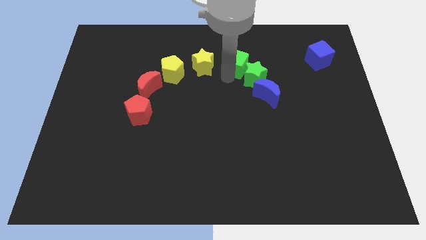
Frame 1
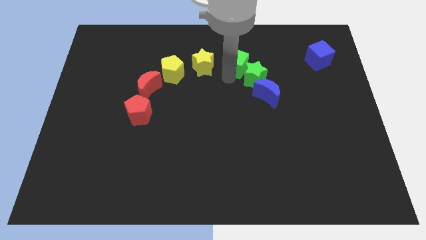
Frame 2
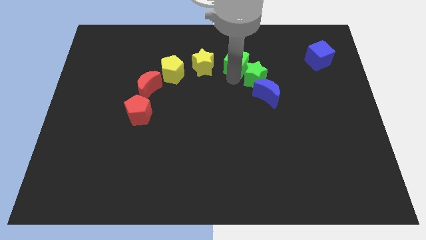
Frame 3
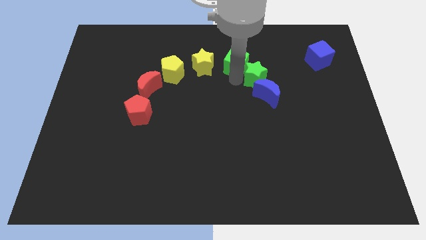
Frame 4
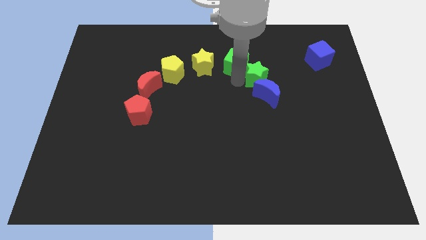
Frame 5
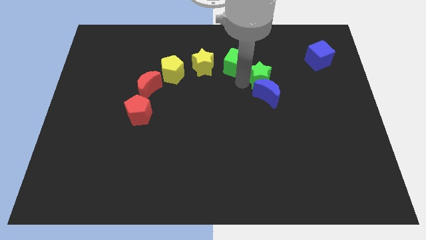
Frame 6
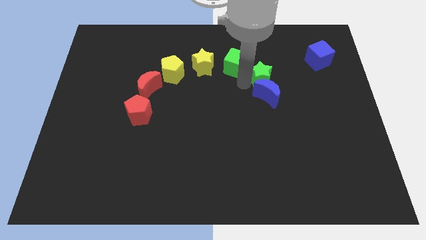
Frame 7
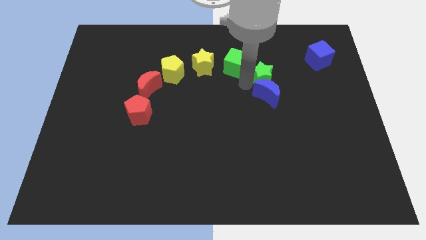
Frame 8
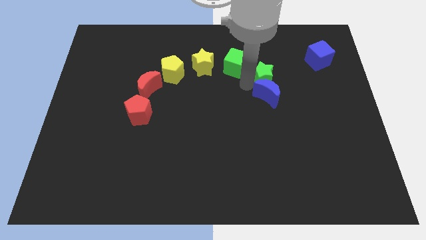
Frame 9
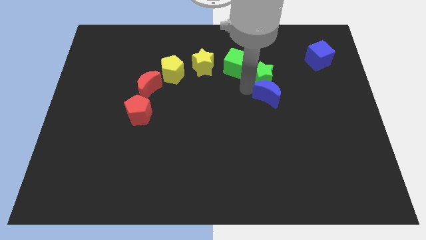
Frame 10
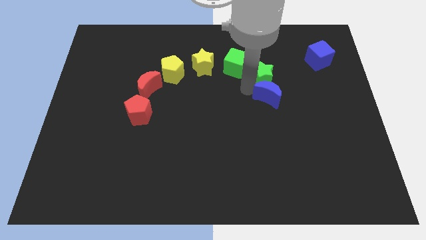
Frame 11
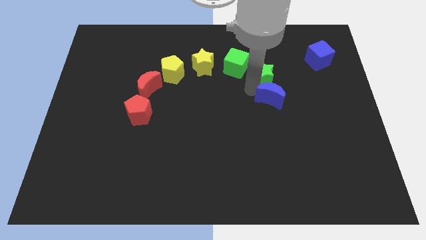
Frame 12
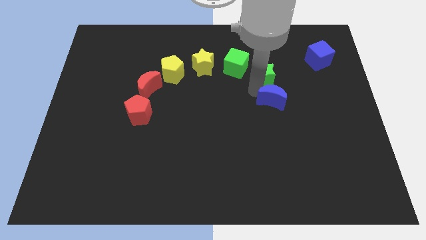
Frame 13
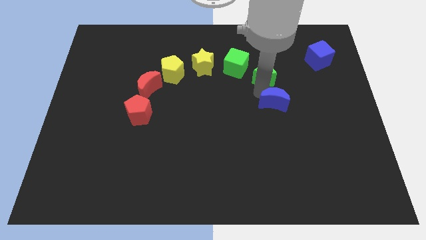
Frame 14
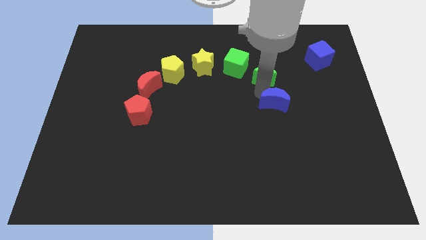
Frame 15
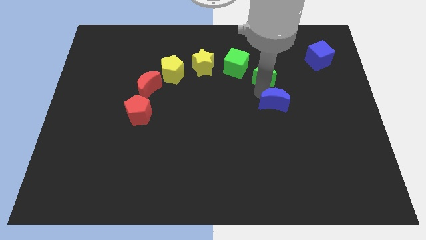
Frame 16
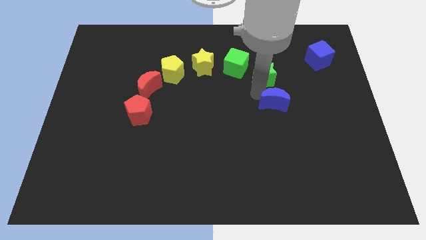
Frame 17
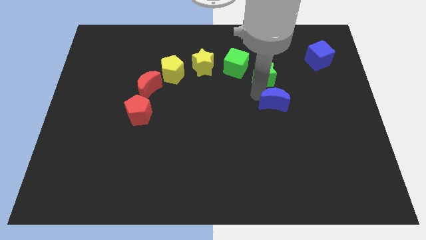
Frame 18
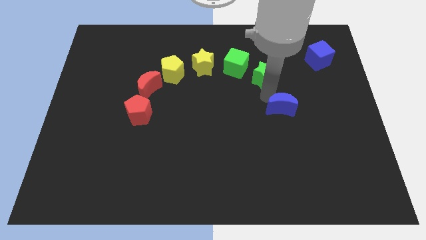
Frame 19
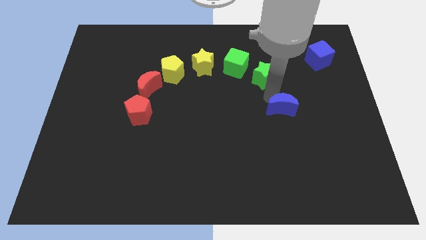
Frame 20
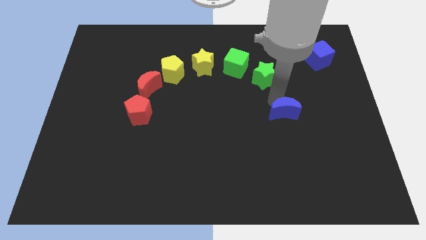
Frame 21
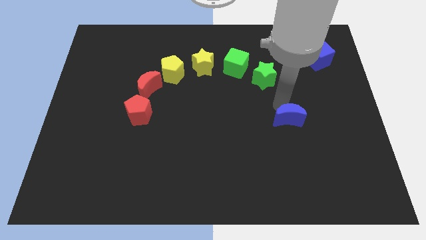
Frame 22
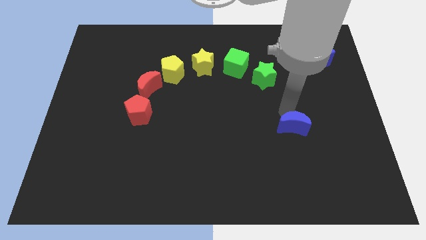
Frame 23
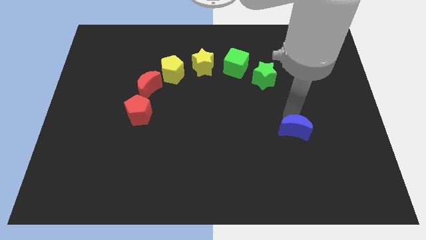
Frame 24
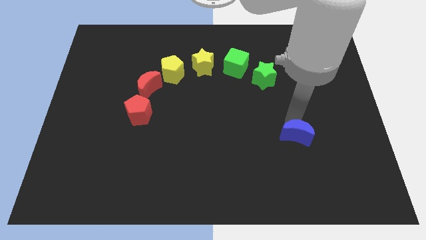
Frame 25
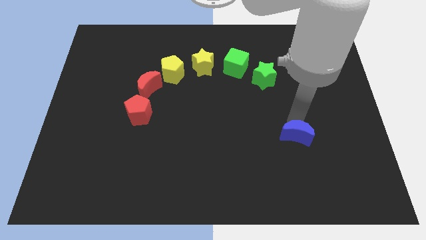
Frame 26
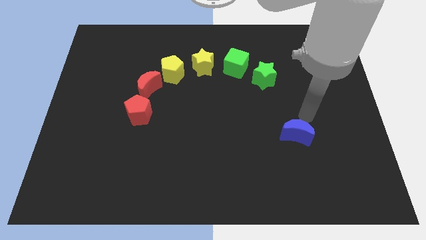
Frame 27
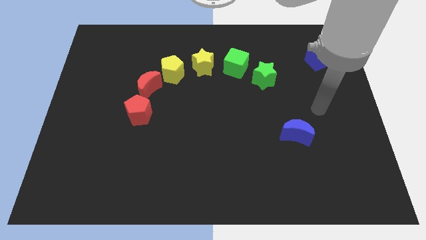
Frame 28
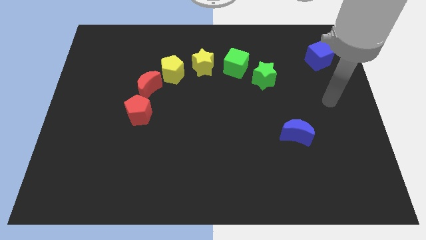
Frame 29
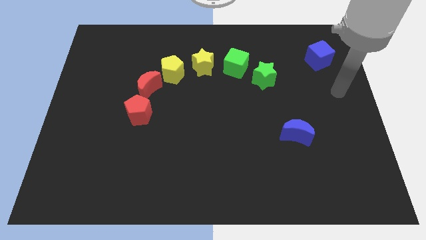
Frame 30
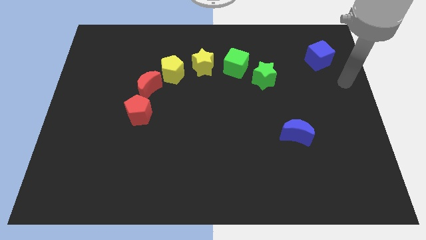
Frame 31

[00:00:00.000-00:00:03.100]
place the blue crescent diagonally below the bottom side of the blue cube

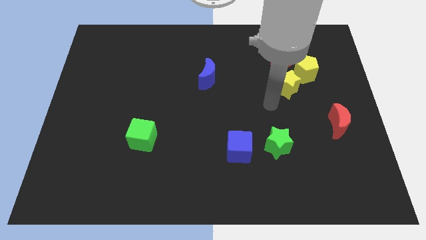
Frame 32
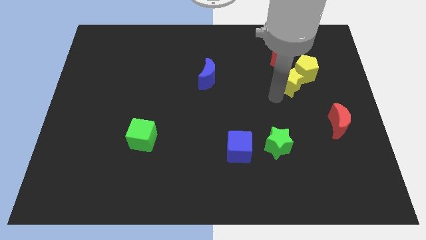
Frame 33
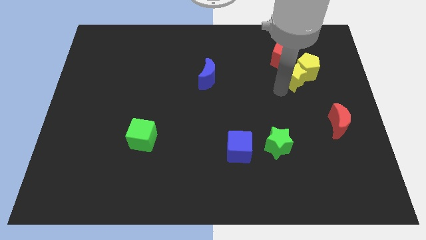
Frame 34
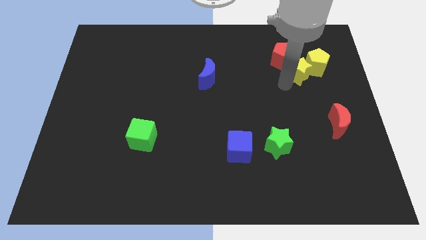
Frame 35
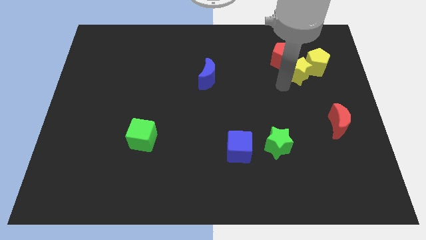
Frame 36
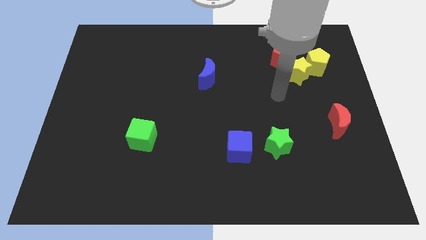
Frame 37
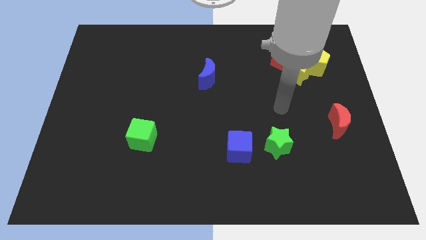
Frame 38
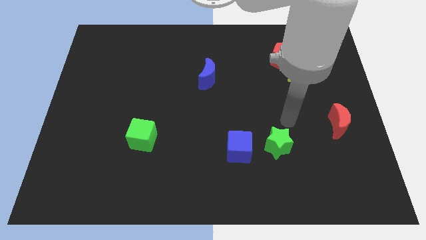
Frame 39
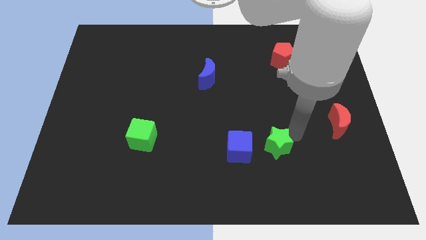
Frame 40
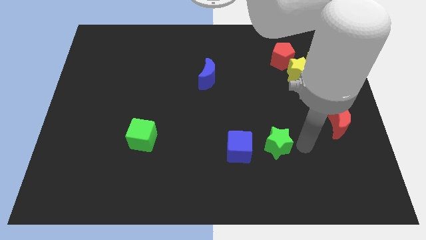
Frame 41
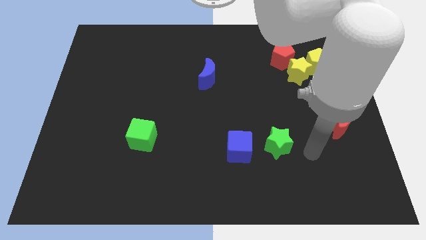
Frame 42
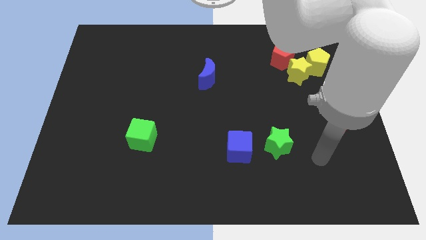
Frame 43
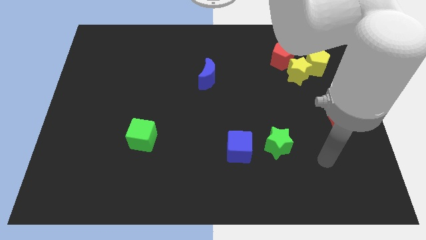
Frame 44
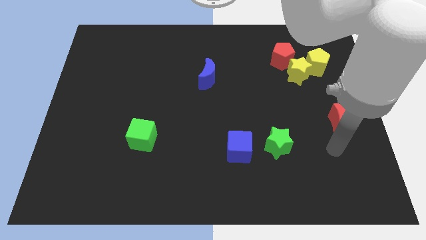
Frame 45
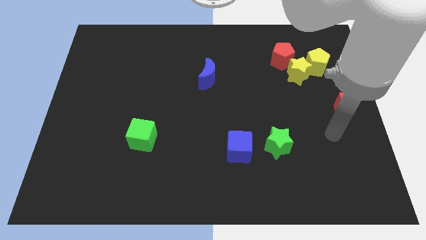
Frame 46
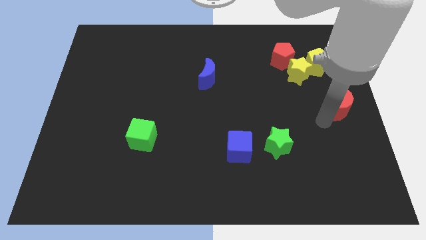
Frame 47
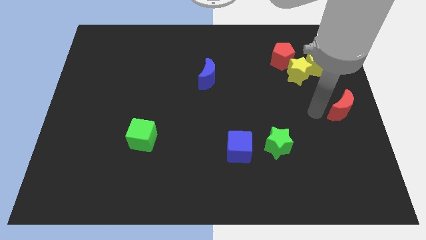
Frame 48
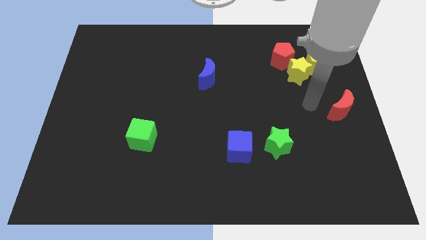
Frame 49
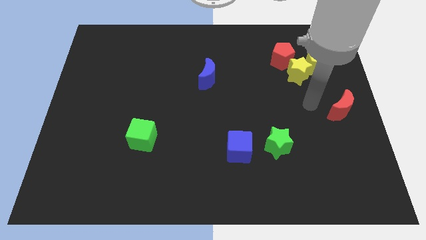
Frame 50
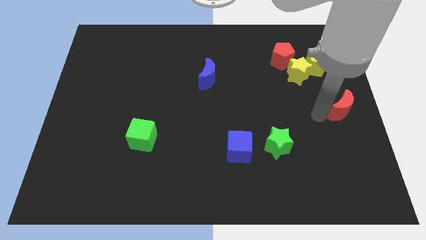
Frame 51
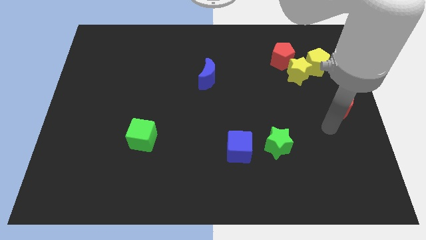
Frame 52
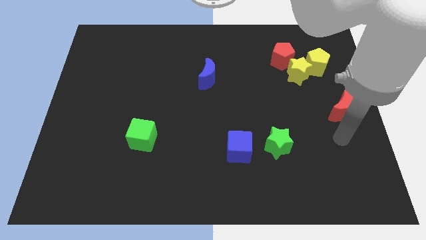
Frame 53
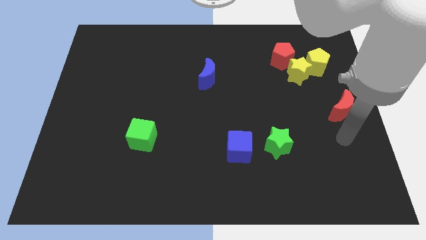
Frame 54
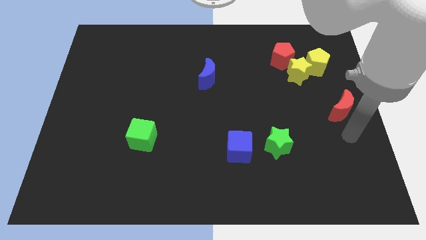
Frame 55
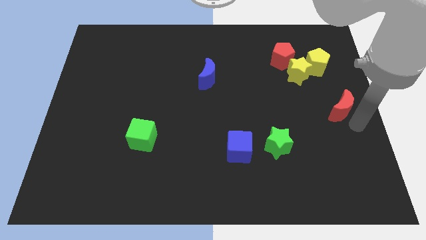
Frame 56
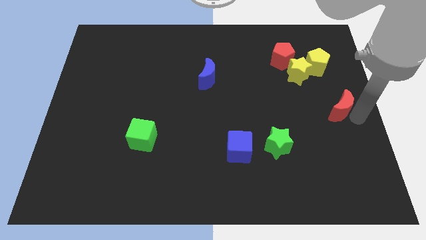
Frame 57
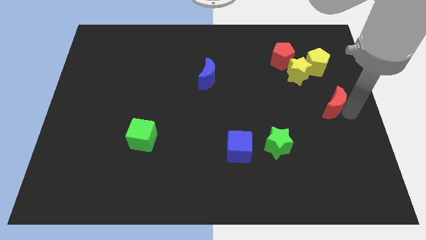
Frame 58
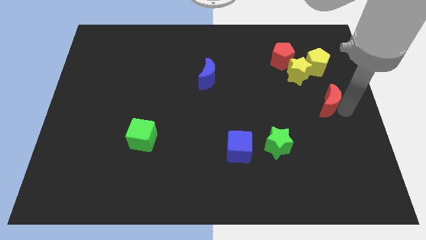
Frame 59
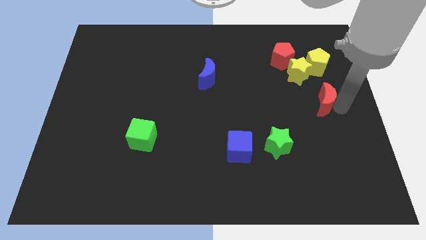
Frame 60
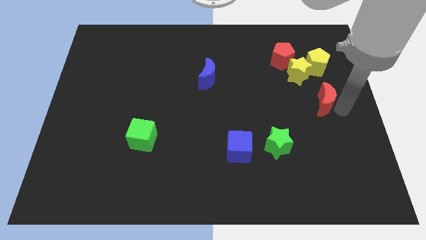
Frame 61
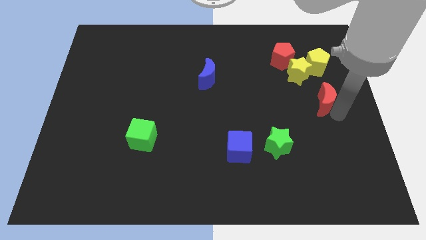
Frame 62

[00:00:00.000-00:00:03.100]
move the red moon below the yellow pentagon

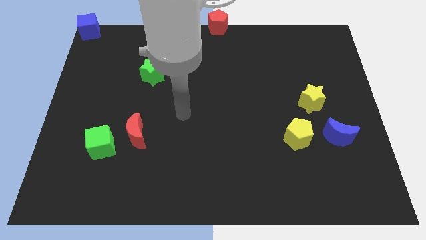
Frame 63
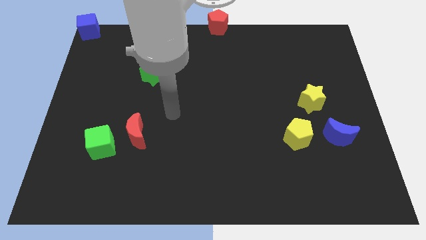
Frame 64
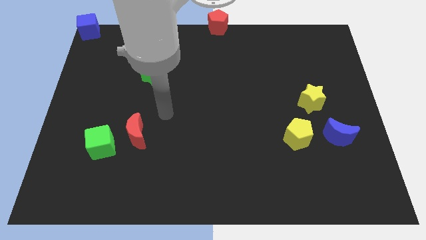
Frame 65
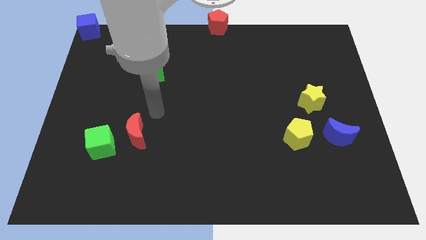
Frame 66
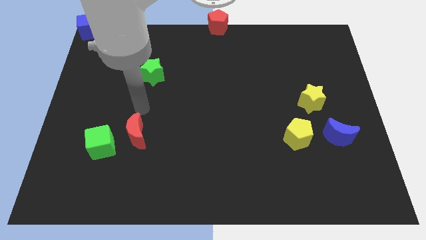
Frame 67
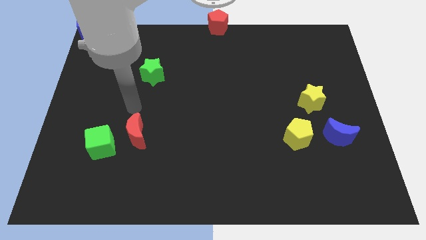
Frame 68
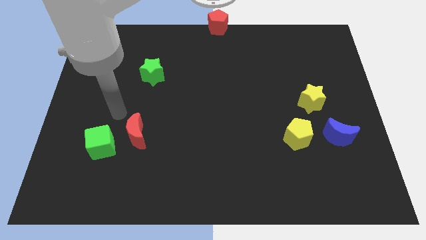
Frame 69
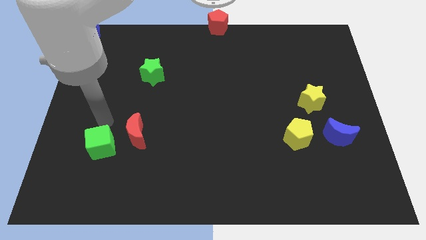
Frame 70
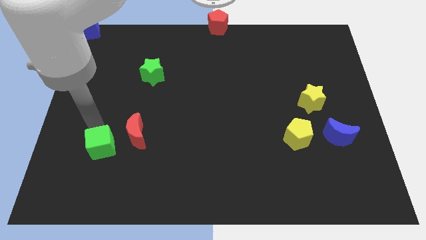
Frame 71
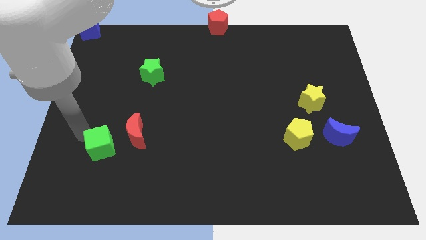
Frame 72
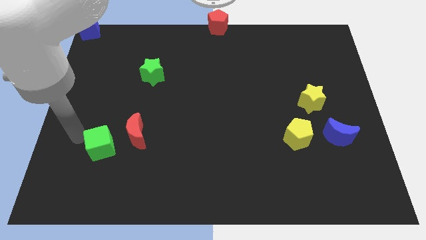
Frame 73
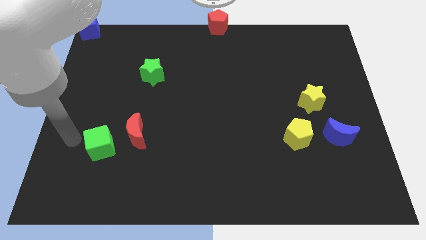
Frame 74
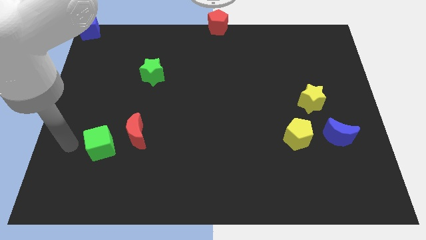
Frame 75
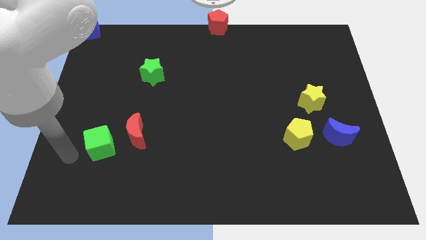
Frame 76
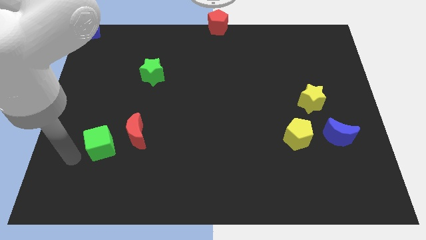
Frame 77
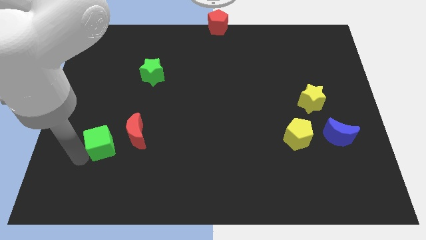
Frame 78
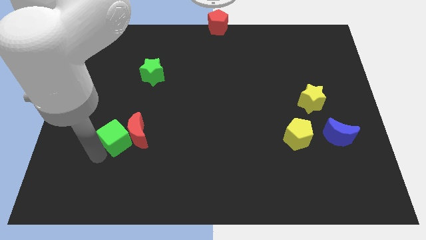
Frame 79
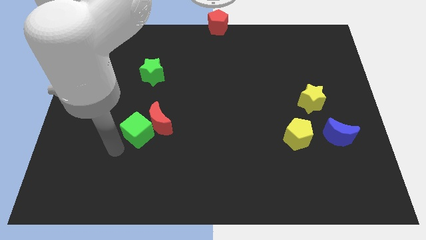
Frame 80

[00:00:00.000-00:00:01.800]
make the green cube touch the left side of the red moon

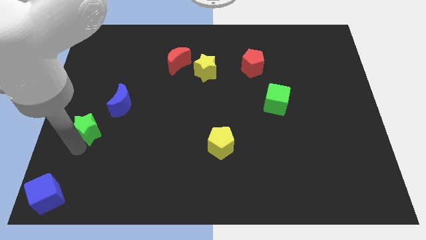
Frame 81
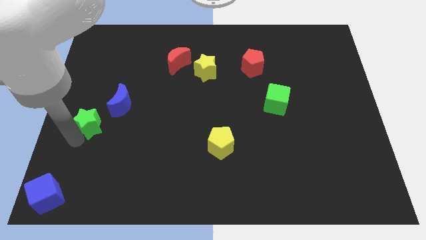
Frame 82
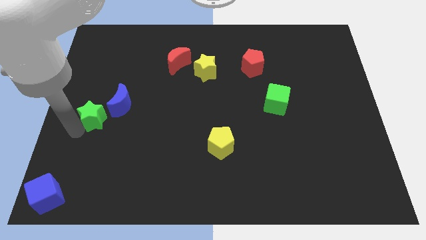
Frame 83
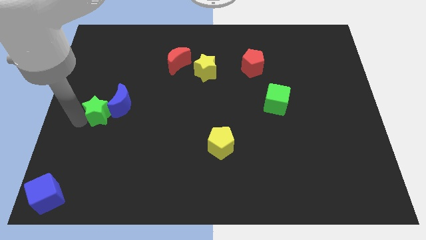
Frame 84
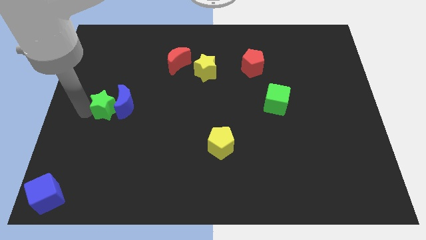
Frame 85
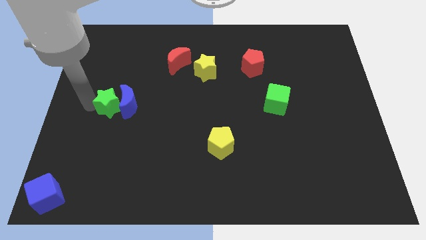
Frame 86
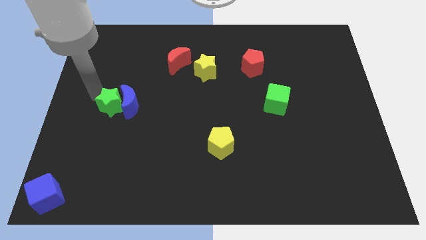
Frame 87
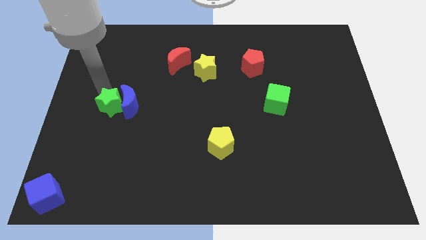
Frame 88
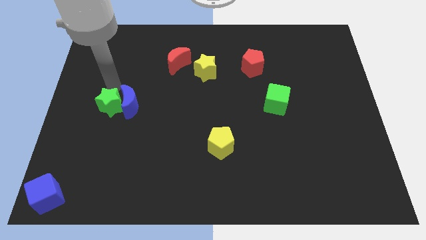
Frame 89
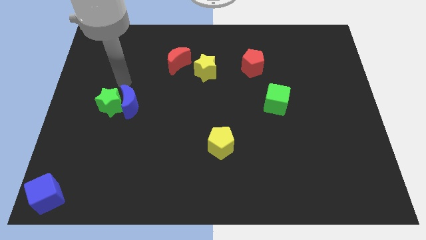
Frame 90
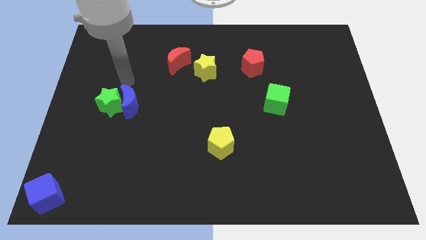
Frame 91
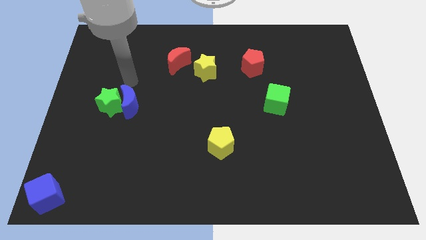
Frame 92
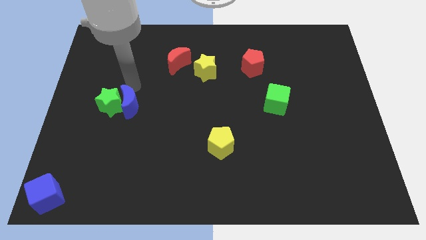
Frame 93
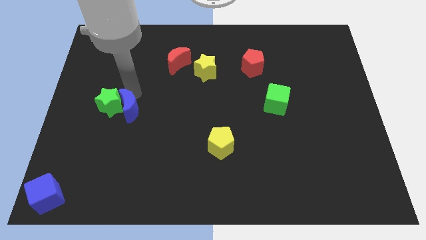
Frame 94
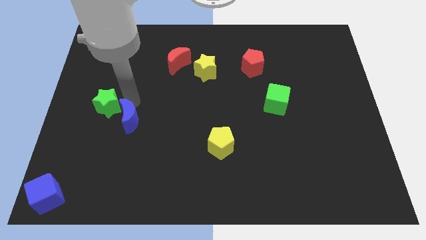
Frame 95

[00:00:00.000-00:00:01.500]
place the green star left to the blue moon
